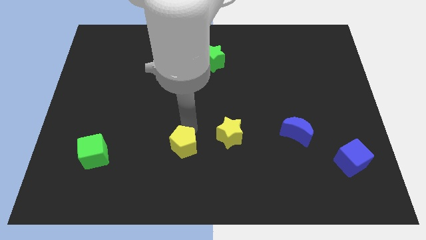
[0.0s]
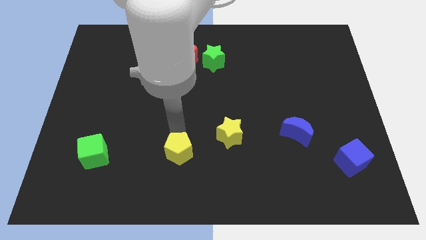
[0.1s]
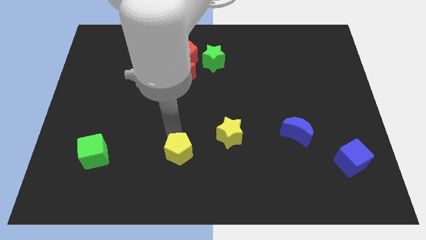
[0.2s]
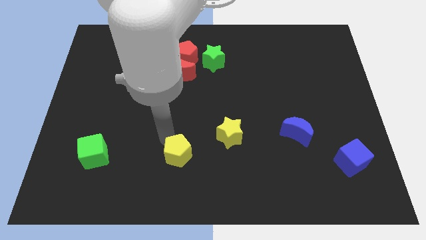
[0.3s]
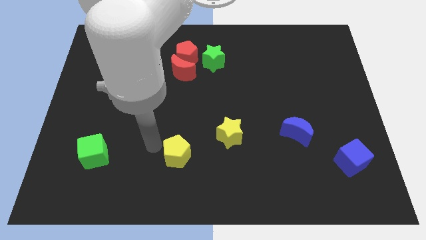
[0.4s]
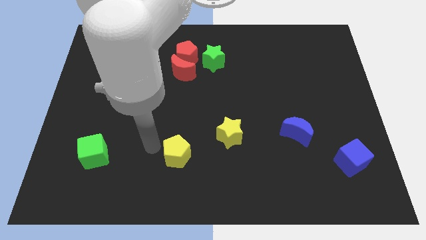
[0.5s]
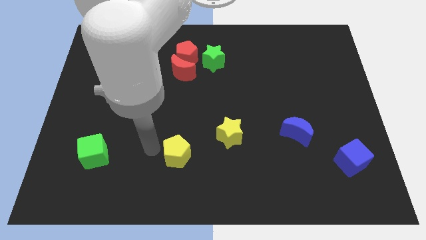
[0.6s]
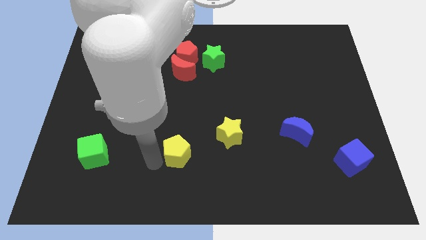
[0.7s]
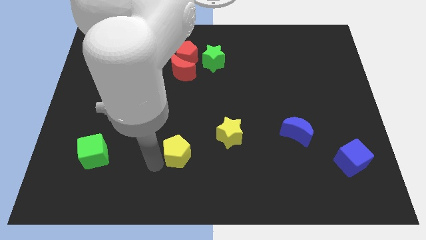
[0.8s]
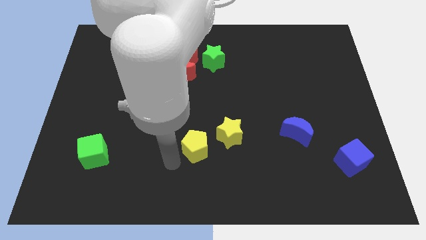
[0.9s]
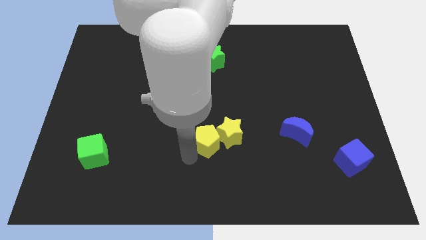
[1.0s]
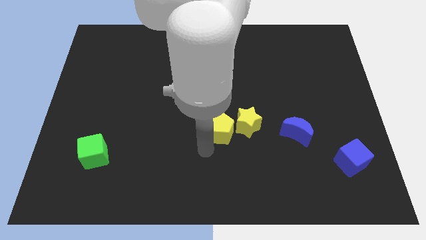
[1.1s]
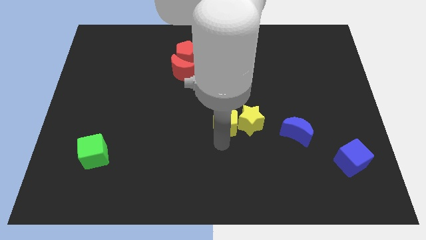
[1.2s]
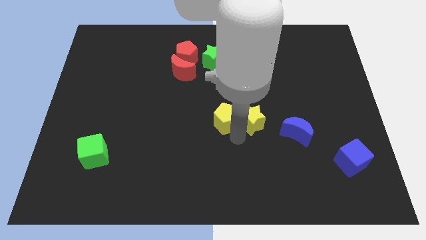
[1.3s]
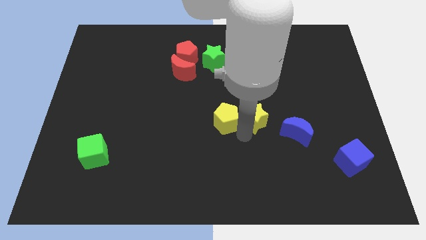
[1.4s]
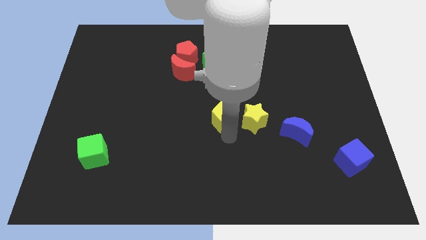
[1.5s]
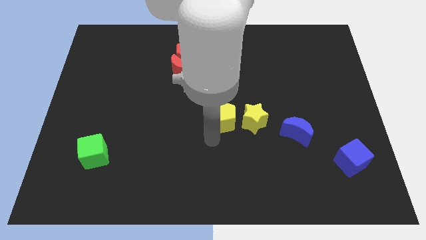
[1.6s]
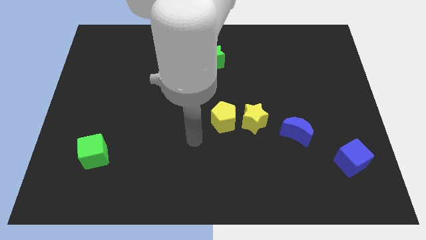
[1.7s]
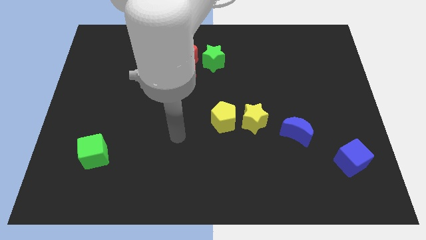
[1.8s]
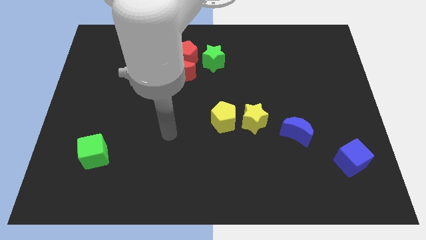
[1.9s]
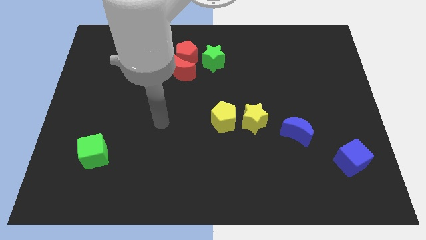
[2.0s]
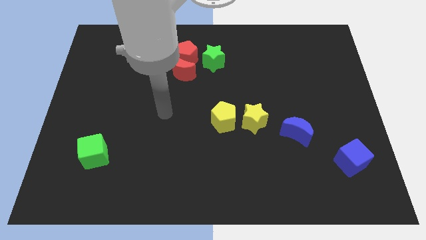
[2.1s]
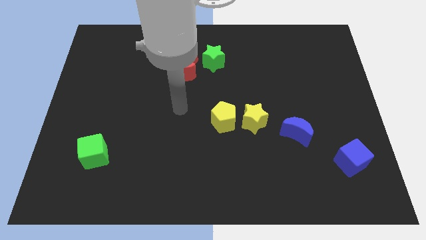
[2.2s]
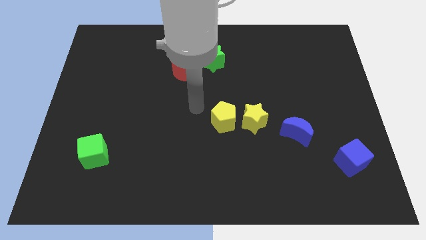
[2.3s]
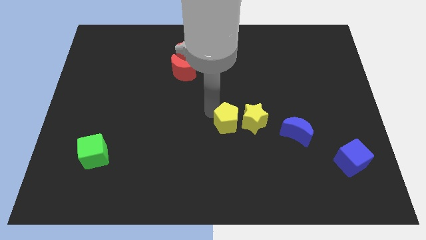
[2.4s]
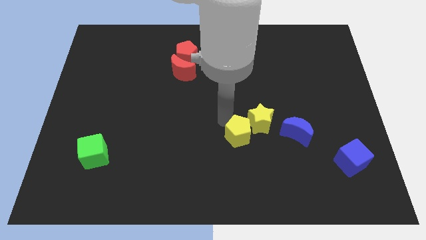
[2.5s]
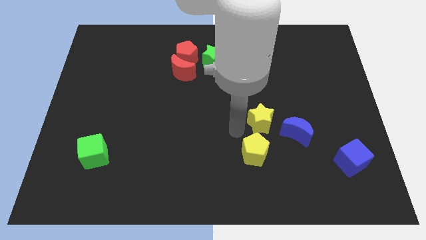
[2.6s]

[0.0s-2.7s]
push the yellow pentagon and yellow star towards upward

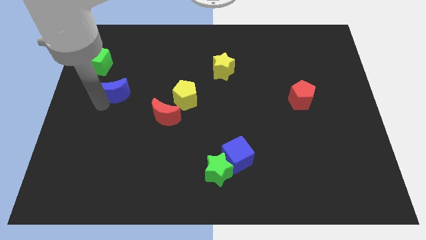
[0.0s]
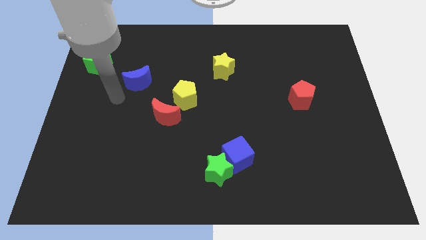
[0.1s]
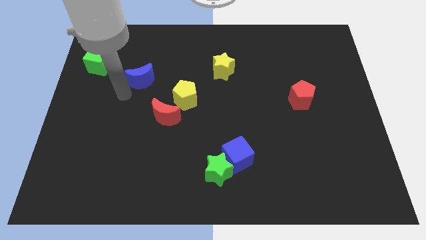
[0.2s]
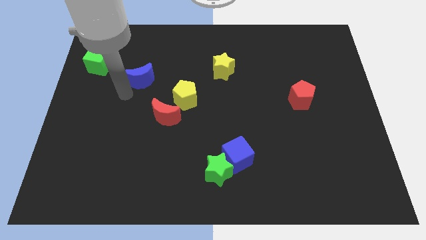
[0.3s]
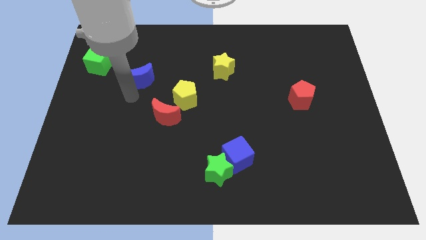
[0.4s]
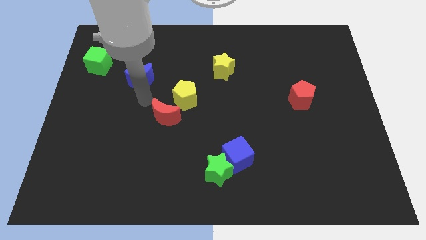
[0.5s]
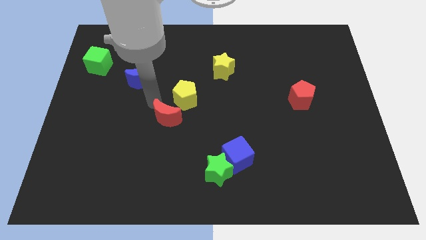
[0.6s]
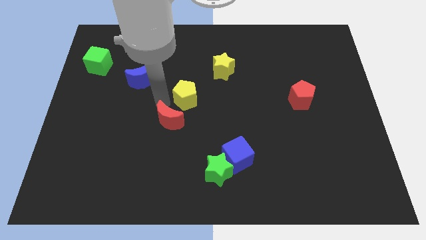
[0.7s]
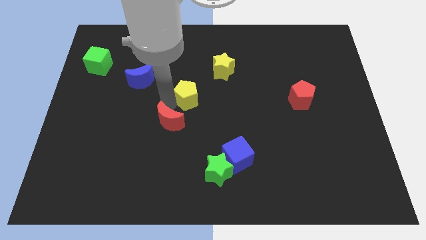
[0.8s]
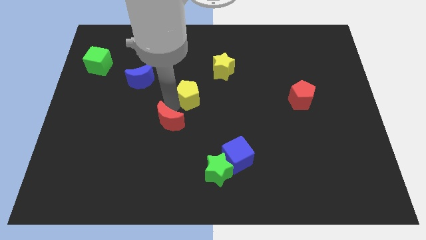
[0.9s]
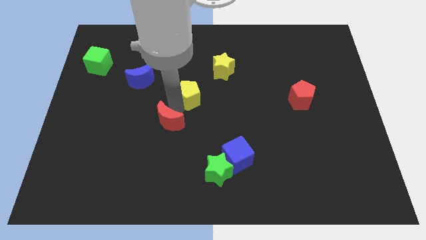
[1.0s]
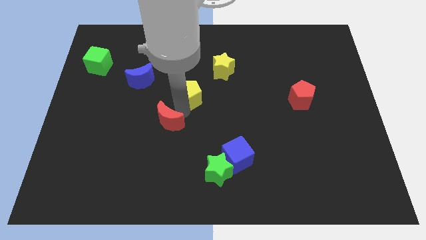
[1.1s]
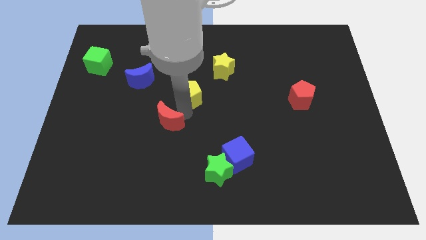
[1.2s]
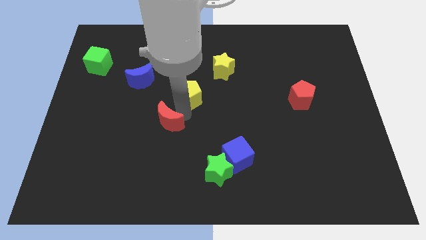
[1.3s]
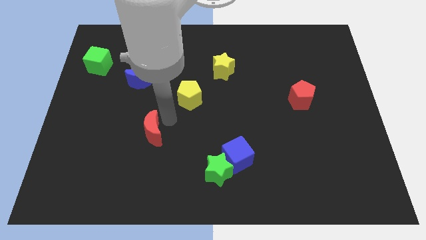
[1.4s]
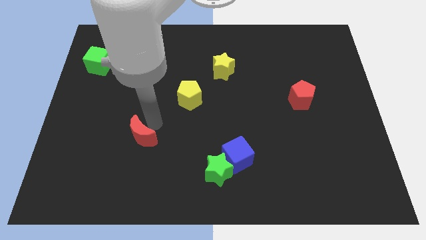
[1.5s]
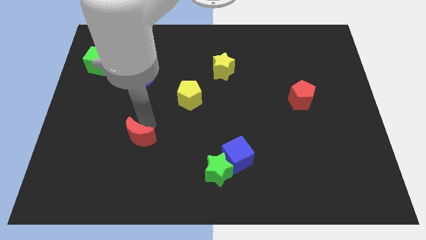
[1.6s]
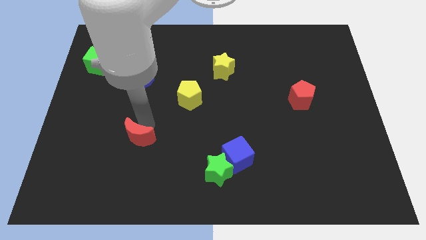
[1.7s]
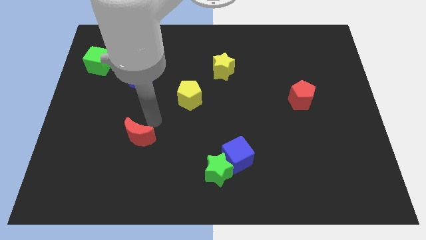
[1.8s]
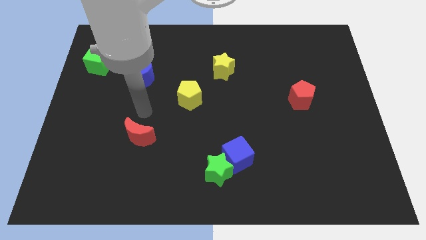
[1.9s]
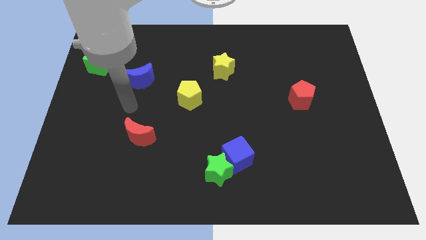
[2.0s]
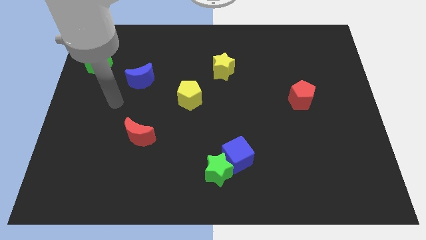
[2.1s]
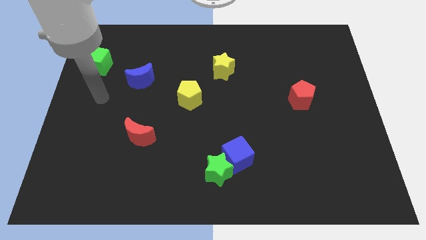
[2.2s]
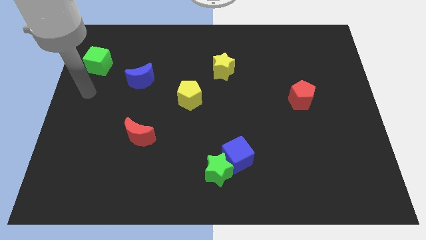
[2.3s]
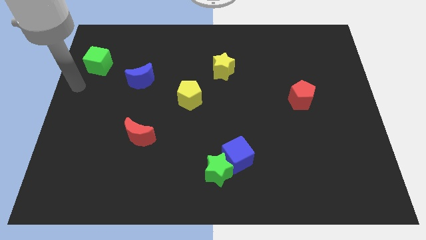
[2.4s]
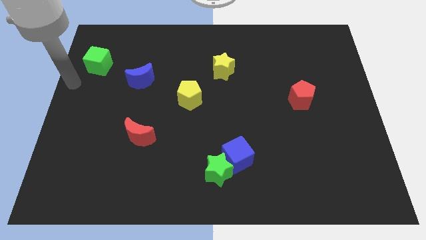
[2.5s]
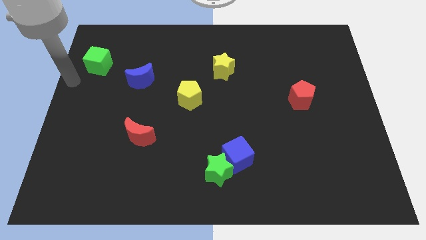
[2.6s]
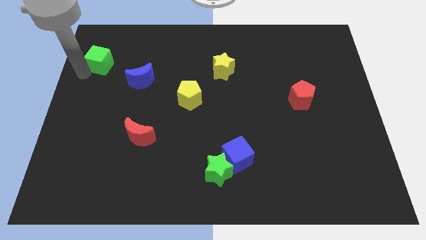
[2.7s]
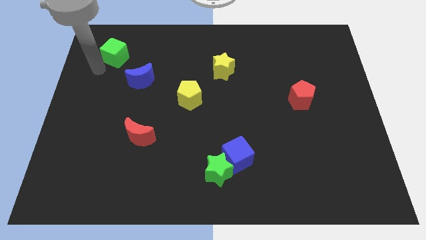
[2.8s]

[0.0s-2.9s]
place the arm near the green cube

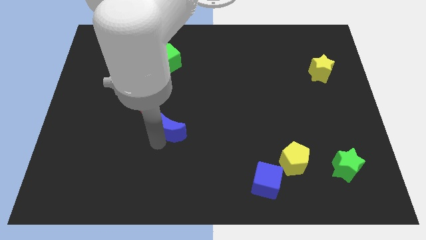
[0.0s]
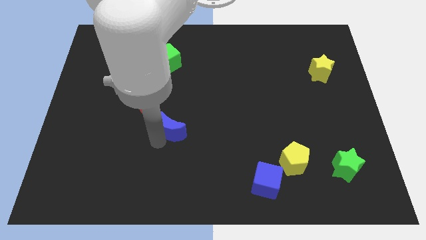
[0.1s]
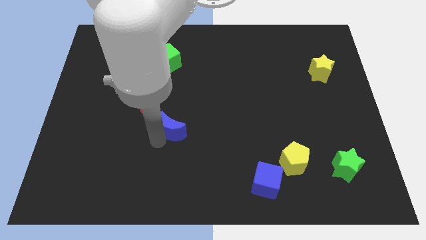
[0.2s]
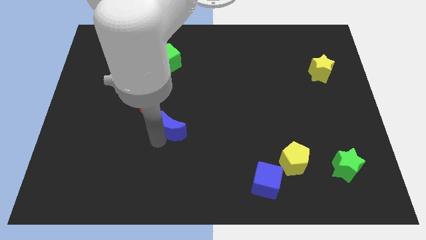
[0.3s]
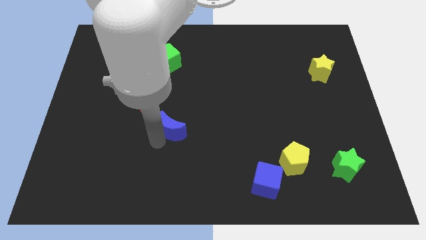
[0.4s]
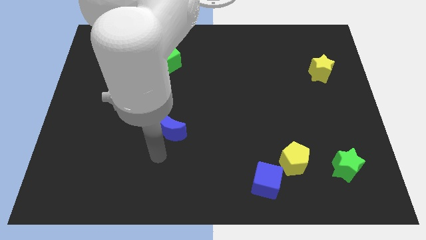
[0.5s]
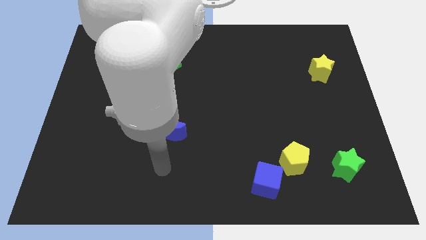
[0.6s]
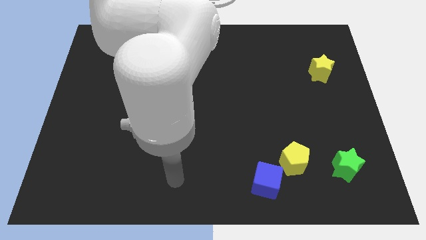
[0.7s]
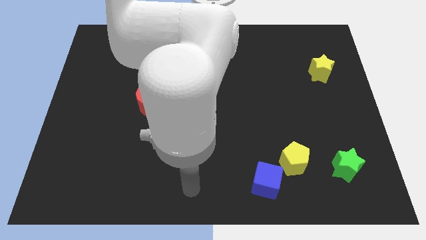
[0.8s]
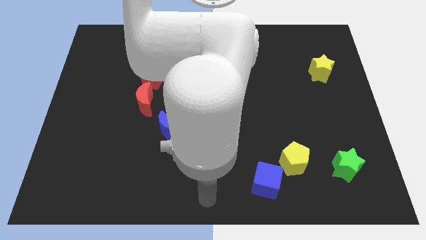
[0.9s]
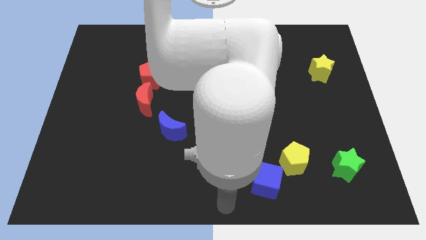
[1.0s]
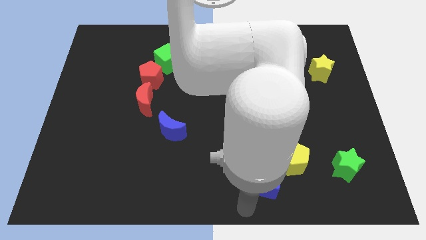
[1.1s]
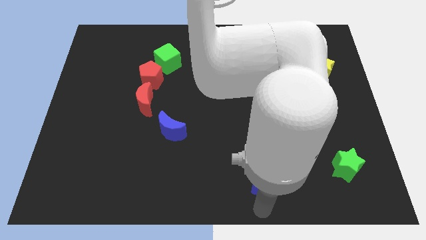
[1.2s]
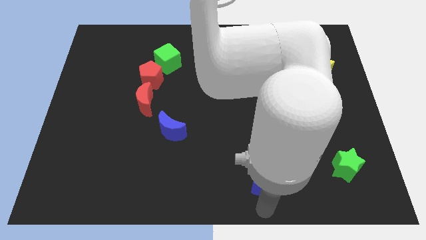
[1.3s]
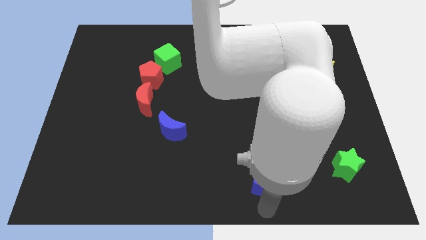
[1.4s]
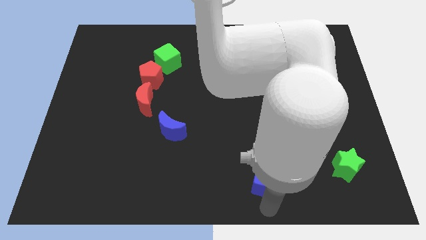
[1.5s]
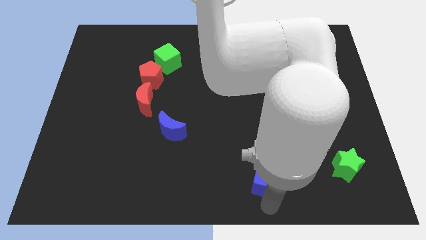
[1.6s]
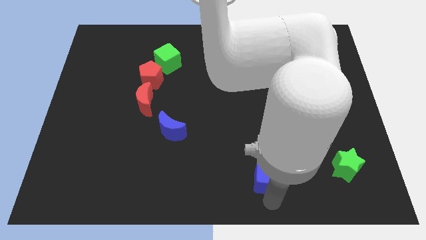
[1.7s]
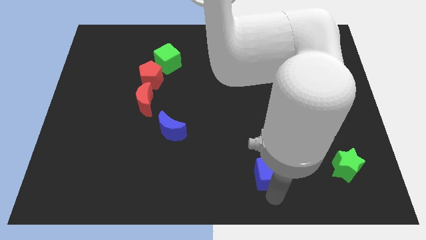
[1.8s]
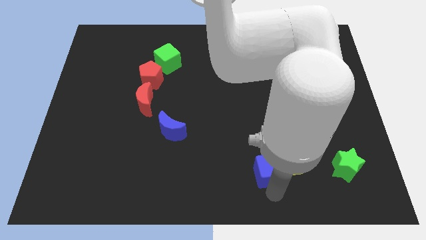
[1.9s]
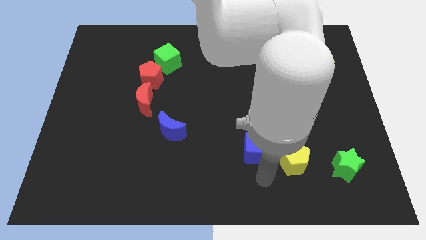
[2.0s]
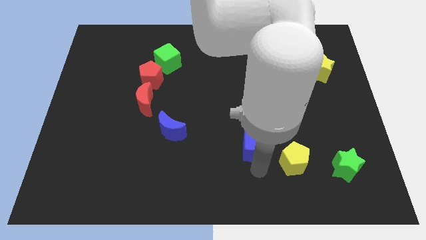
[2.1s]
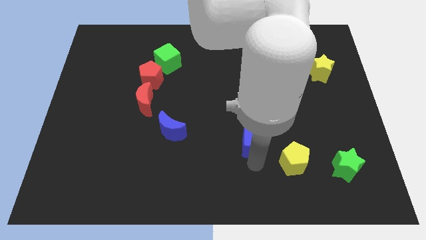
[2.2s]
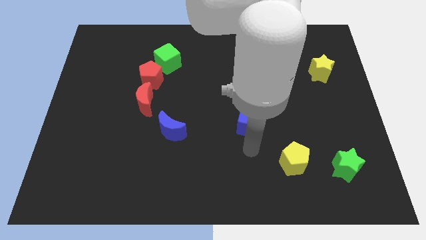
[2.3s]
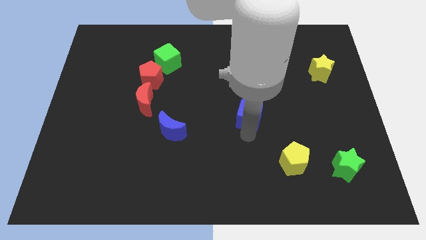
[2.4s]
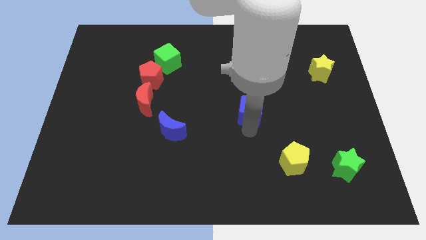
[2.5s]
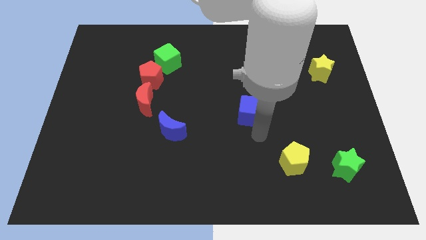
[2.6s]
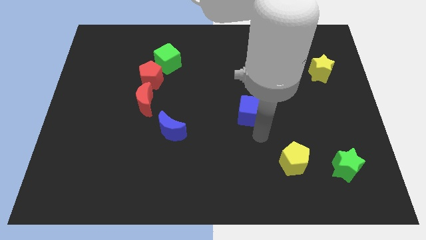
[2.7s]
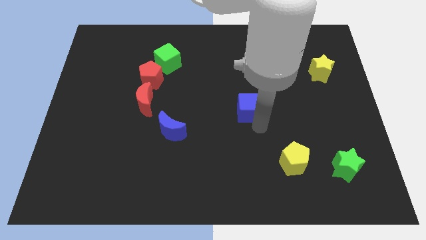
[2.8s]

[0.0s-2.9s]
push blue cube diagonally towards green cube

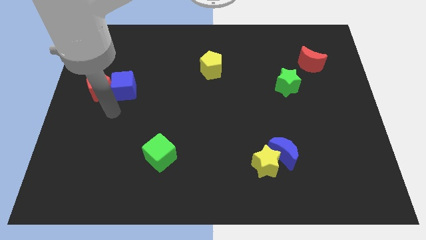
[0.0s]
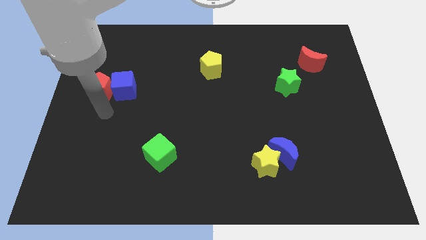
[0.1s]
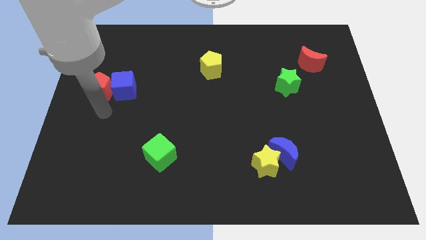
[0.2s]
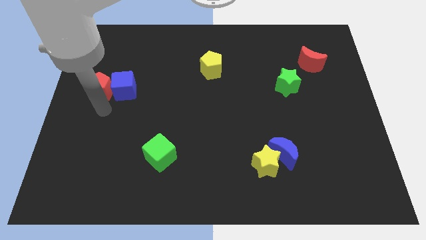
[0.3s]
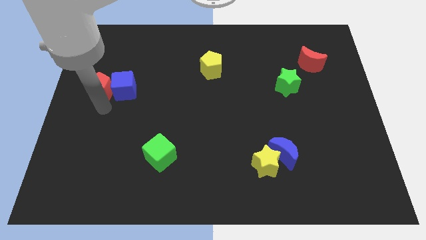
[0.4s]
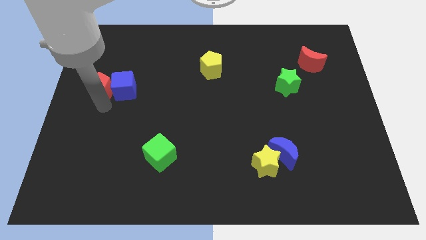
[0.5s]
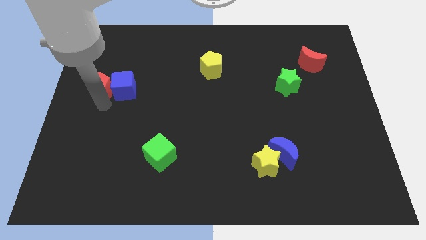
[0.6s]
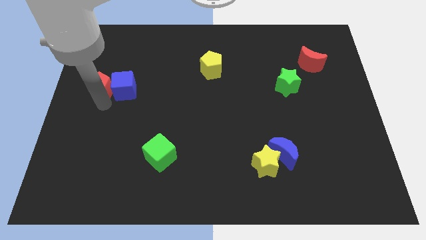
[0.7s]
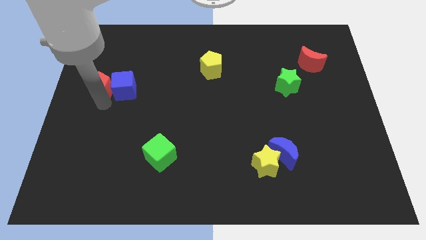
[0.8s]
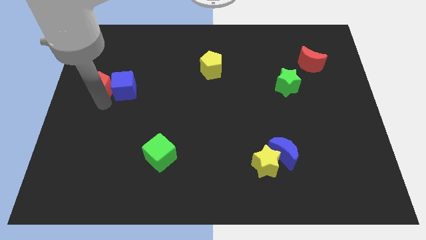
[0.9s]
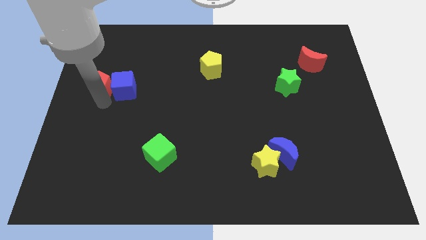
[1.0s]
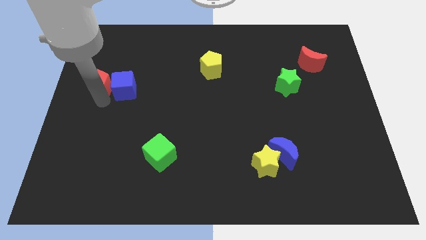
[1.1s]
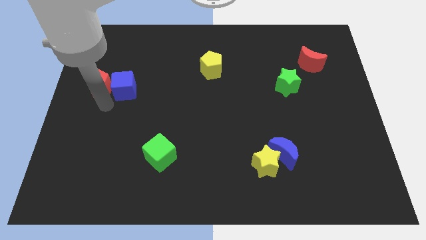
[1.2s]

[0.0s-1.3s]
move the red pentagon slightly towards the top
